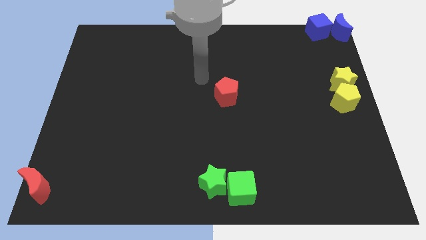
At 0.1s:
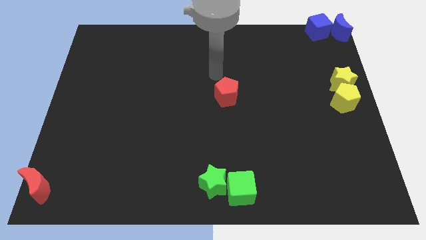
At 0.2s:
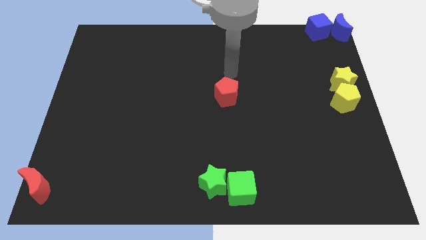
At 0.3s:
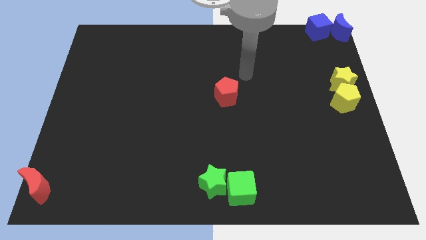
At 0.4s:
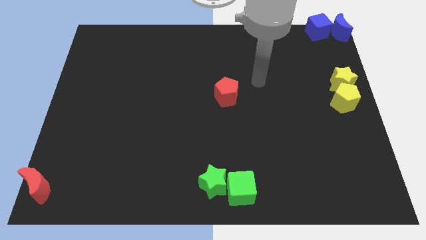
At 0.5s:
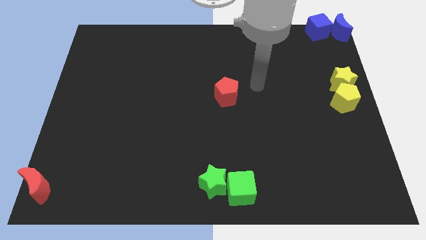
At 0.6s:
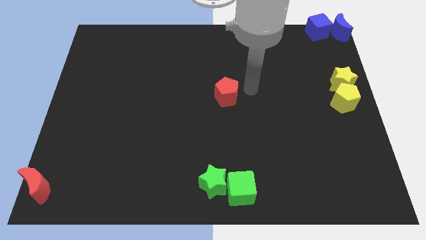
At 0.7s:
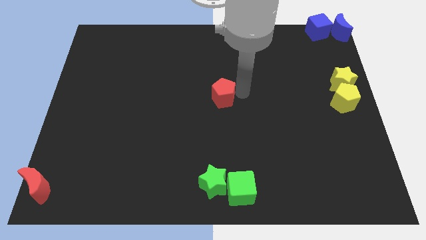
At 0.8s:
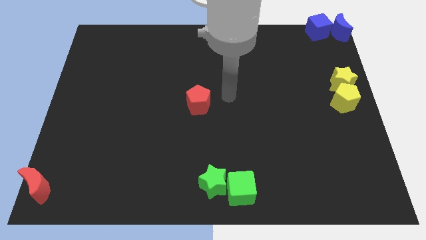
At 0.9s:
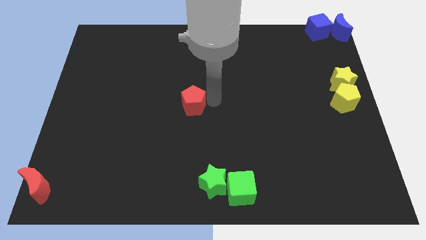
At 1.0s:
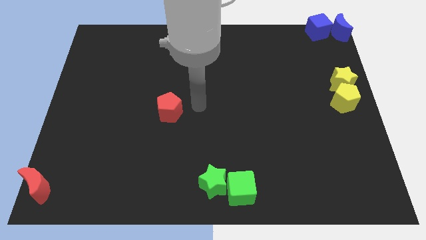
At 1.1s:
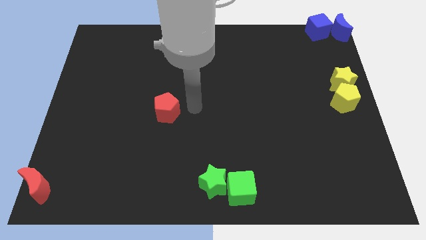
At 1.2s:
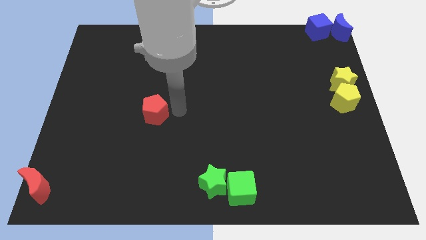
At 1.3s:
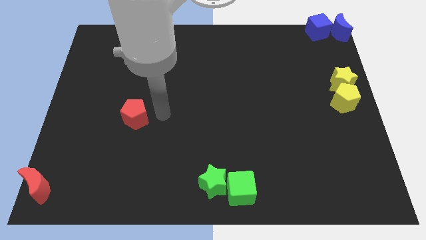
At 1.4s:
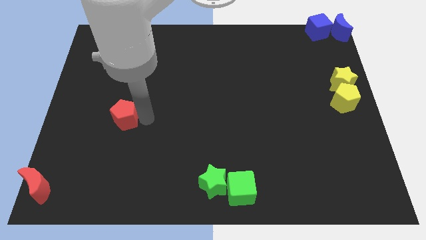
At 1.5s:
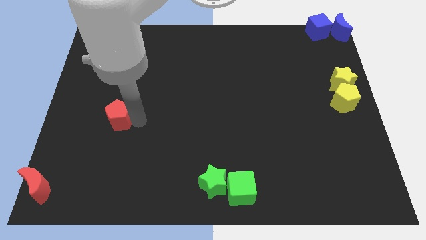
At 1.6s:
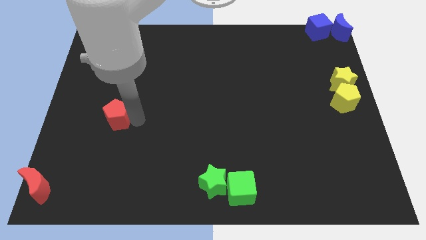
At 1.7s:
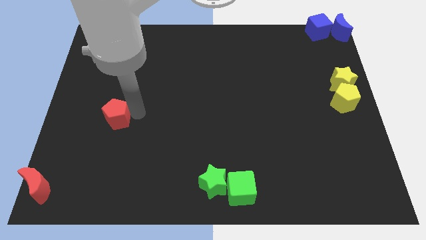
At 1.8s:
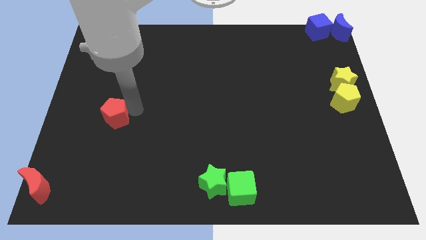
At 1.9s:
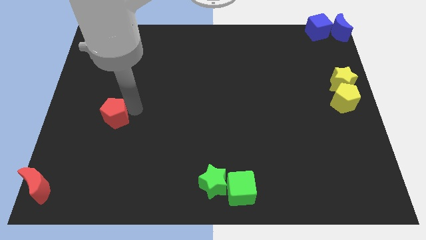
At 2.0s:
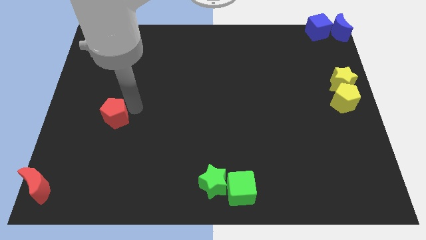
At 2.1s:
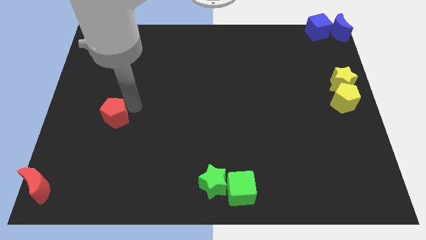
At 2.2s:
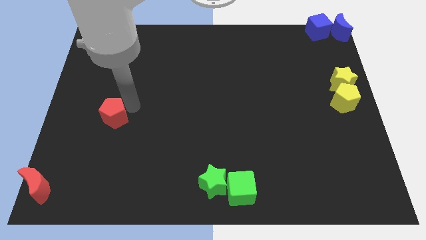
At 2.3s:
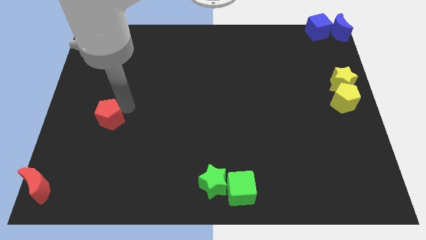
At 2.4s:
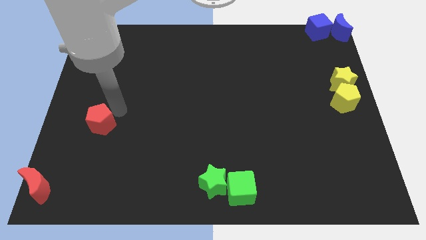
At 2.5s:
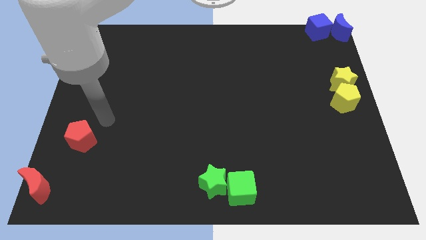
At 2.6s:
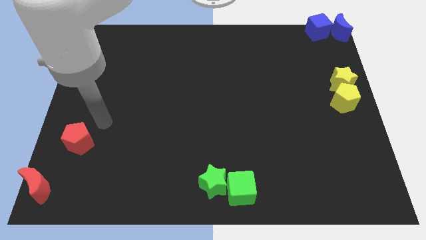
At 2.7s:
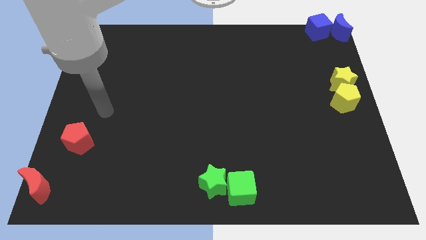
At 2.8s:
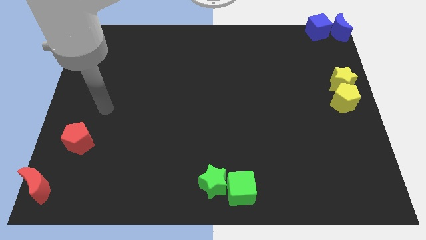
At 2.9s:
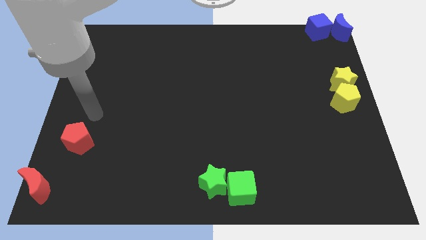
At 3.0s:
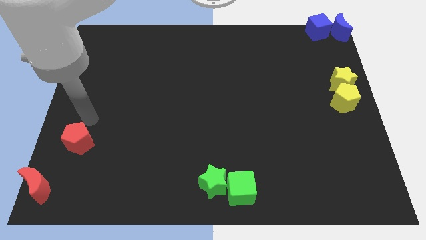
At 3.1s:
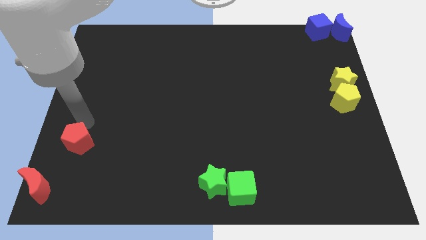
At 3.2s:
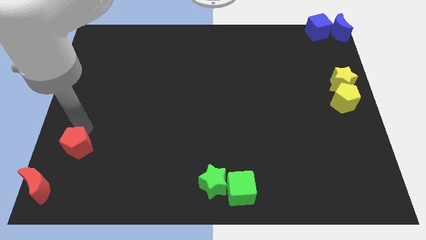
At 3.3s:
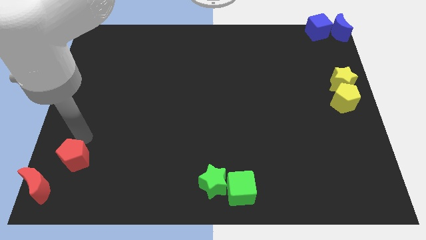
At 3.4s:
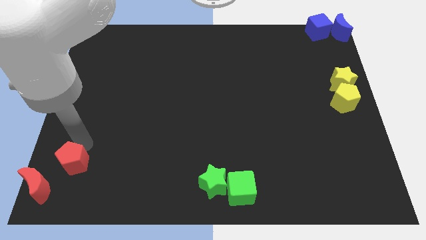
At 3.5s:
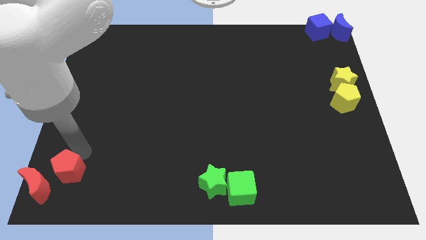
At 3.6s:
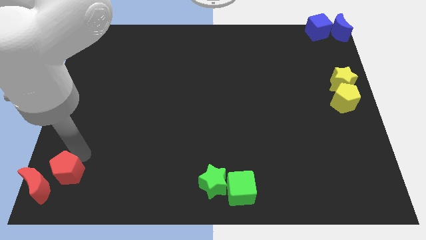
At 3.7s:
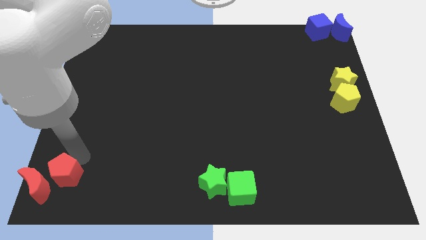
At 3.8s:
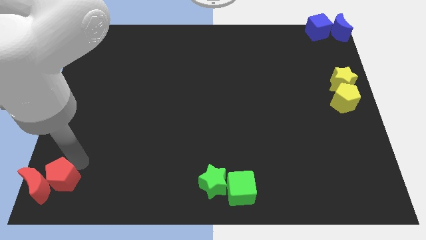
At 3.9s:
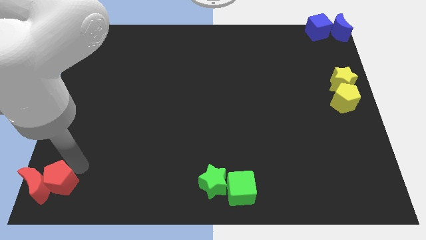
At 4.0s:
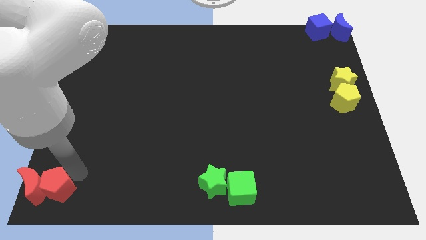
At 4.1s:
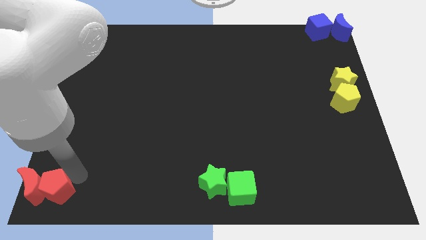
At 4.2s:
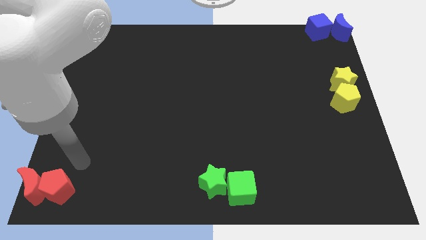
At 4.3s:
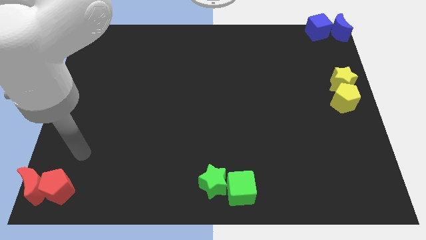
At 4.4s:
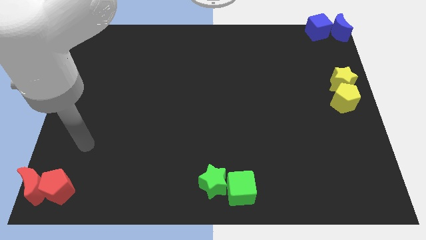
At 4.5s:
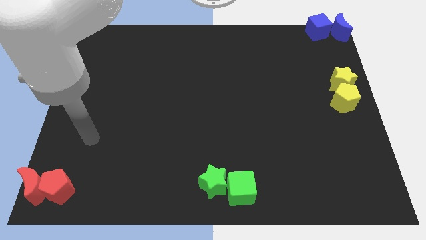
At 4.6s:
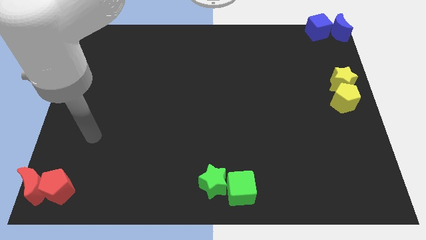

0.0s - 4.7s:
move the red pentagon to the right side of the red moon

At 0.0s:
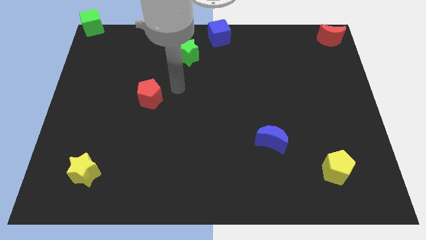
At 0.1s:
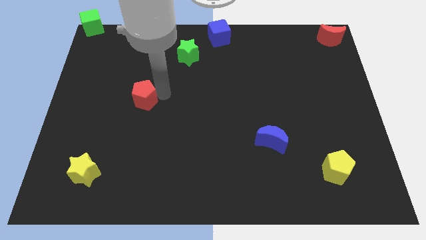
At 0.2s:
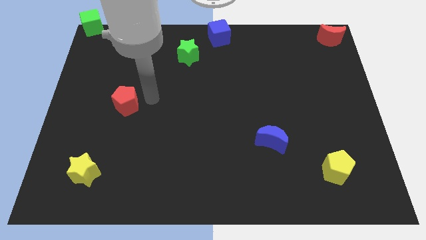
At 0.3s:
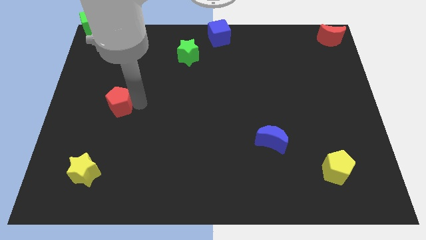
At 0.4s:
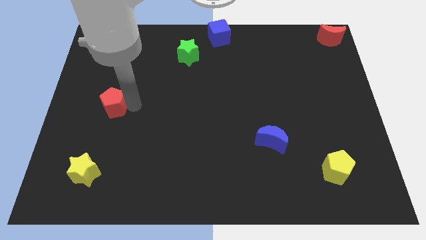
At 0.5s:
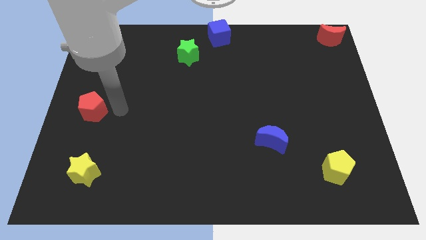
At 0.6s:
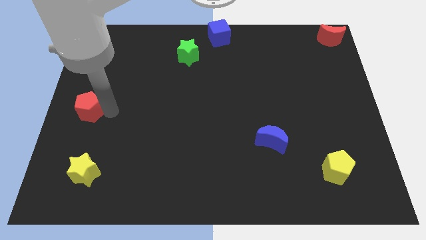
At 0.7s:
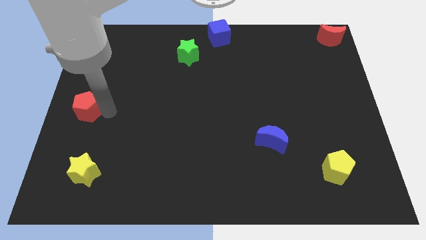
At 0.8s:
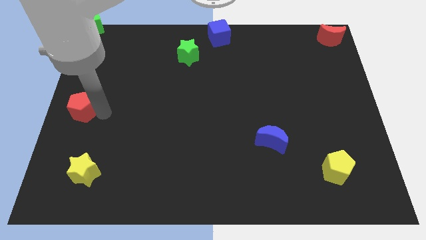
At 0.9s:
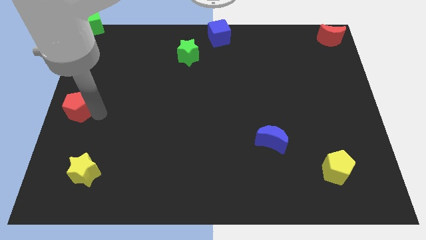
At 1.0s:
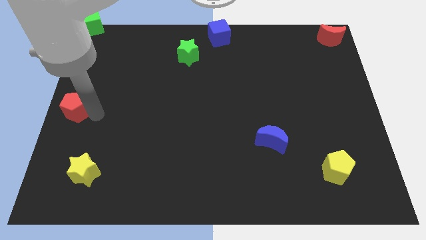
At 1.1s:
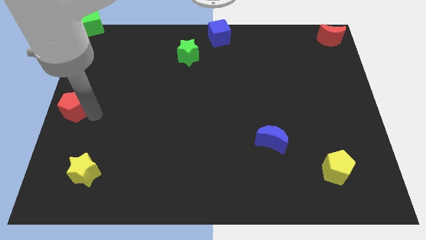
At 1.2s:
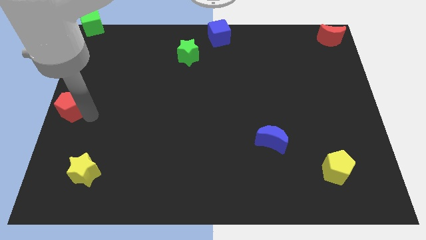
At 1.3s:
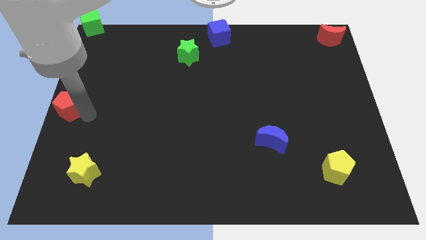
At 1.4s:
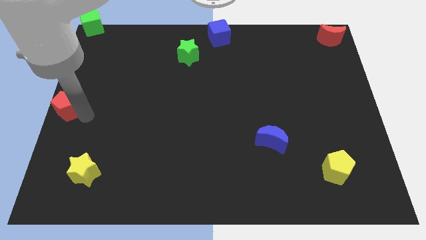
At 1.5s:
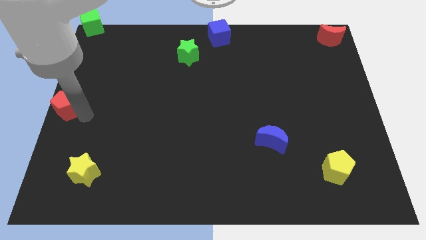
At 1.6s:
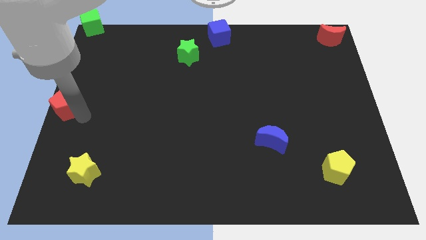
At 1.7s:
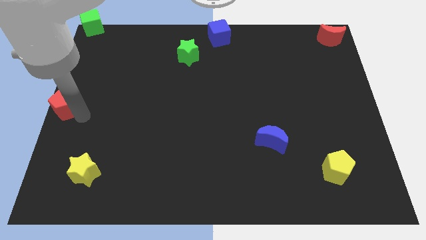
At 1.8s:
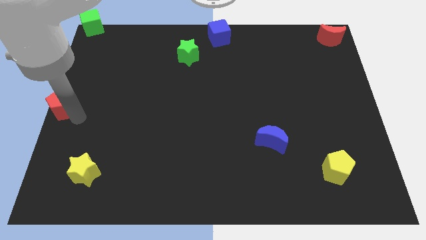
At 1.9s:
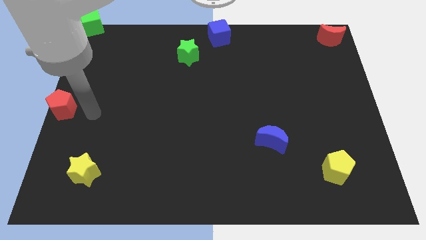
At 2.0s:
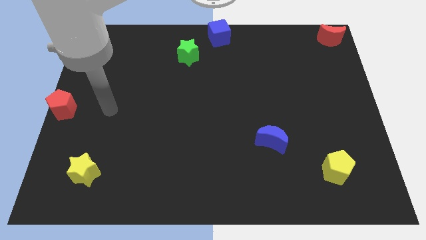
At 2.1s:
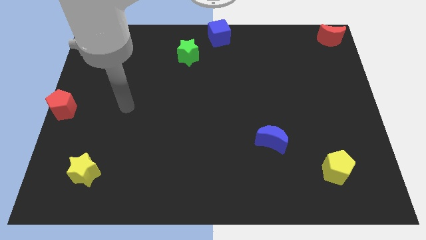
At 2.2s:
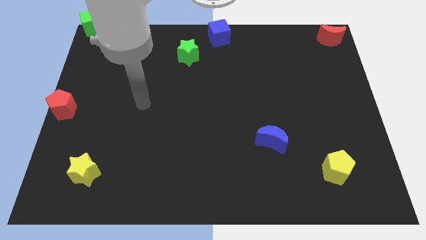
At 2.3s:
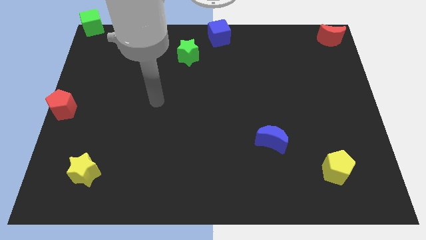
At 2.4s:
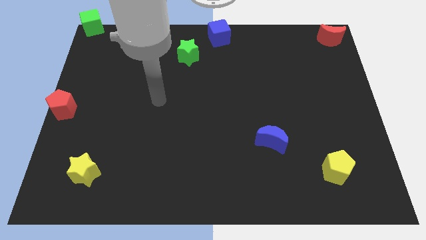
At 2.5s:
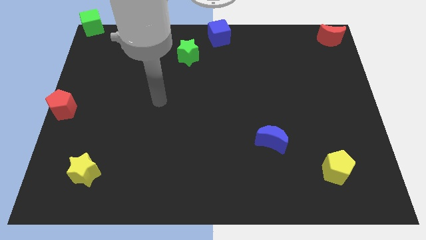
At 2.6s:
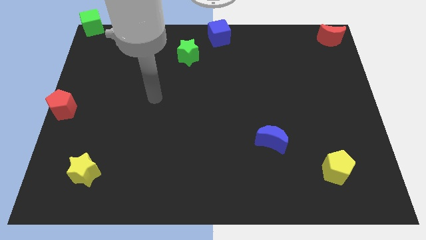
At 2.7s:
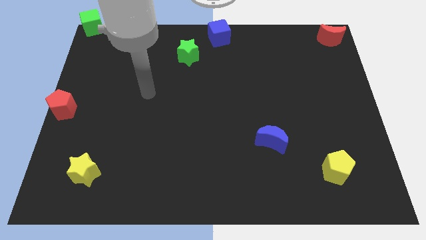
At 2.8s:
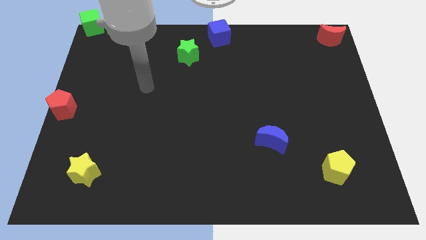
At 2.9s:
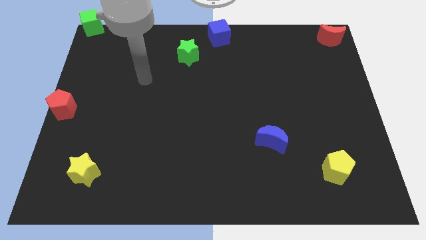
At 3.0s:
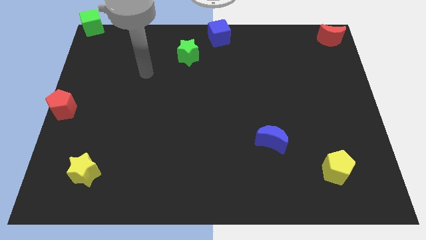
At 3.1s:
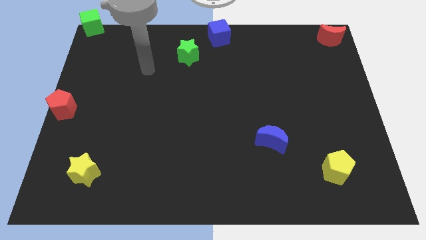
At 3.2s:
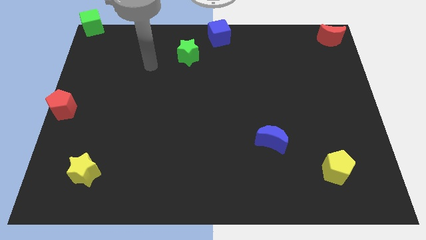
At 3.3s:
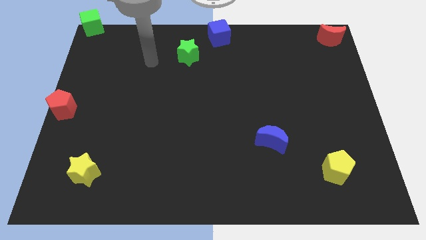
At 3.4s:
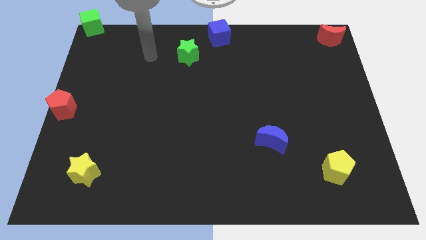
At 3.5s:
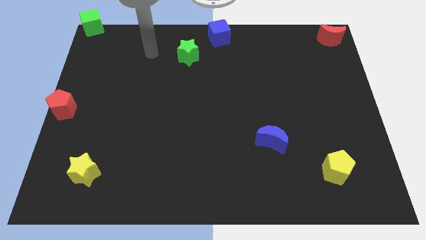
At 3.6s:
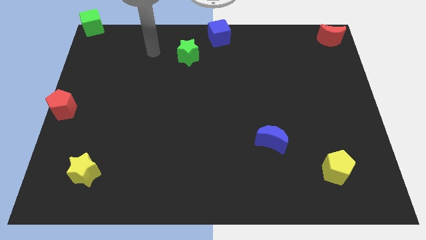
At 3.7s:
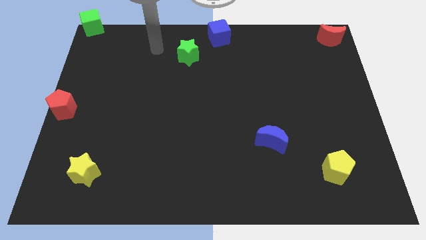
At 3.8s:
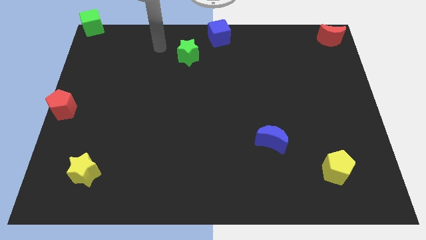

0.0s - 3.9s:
move your arm away from red penatgon

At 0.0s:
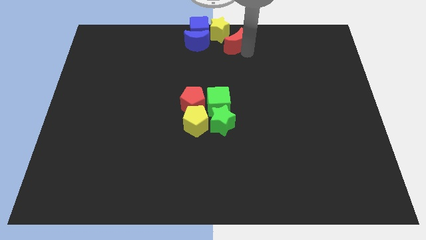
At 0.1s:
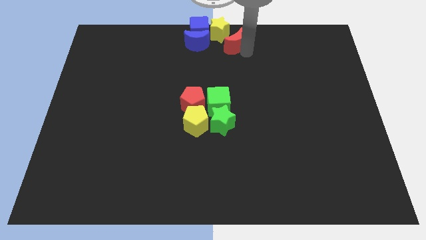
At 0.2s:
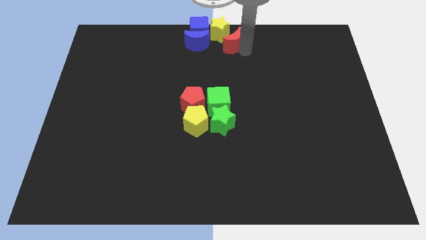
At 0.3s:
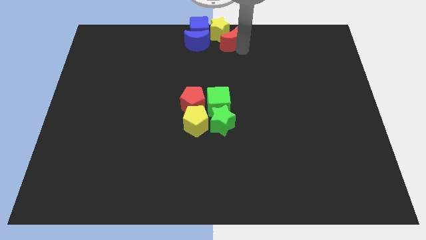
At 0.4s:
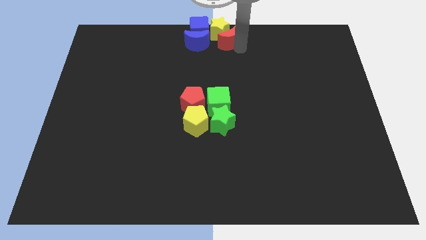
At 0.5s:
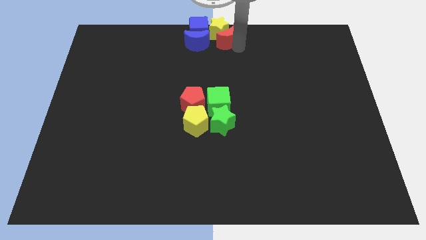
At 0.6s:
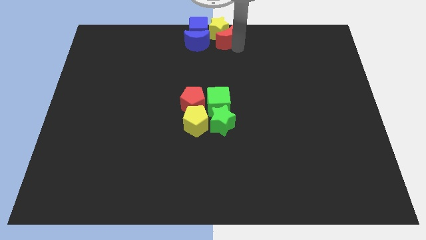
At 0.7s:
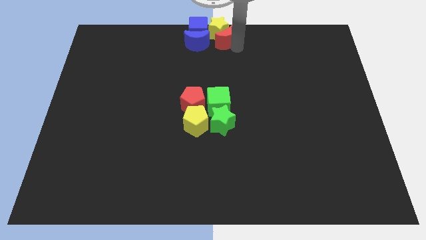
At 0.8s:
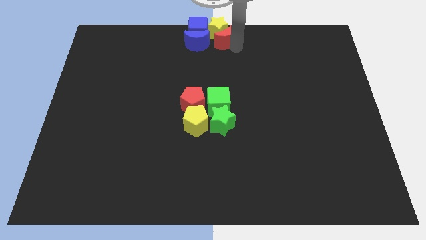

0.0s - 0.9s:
push the red moon into the yellow star
